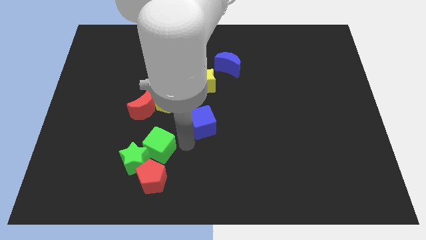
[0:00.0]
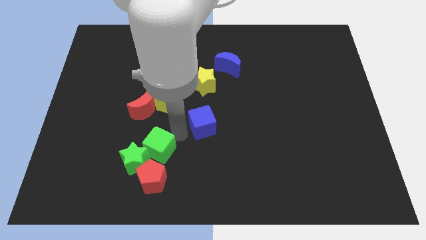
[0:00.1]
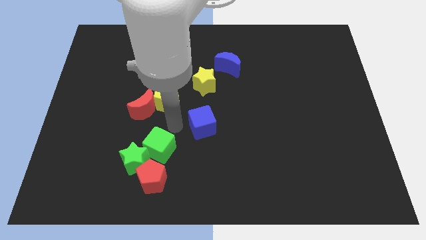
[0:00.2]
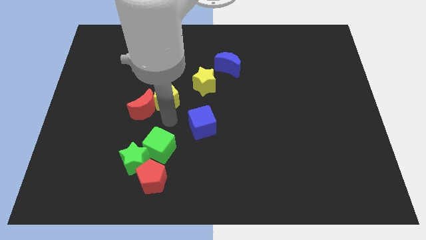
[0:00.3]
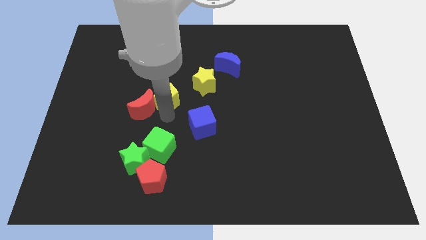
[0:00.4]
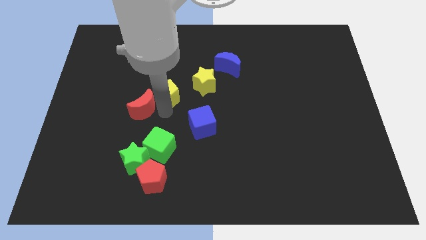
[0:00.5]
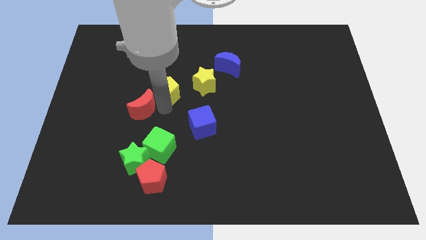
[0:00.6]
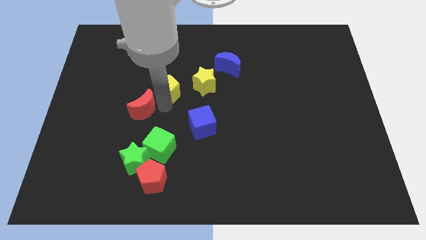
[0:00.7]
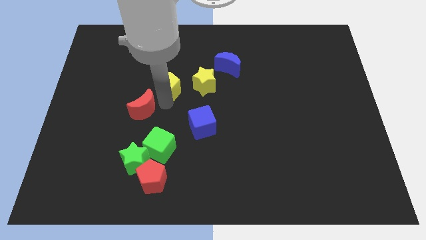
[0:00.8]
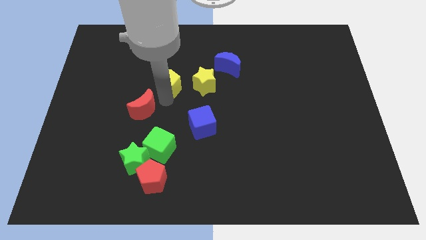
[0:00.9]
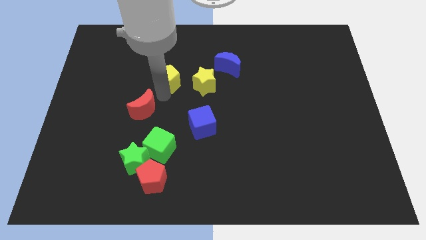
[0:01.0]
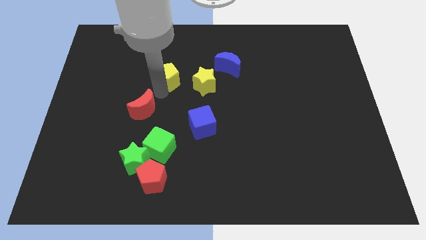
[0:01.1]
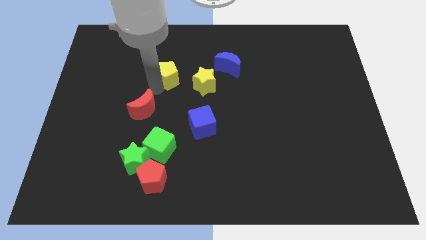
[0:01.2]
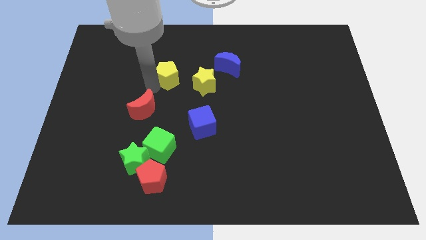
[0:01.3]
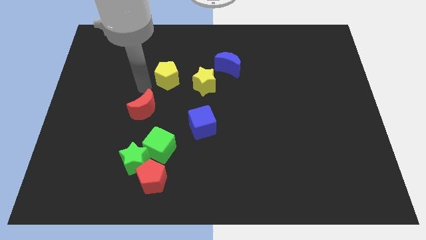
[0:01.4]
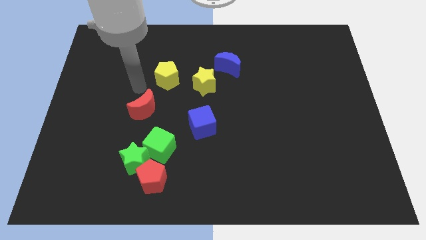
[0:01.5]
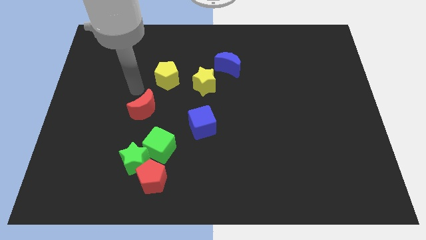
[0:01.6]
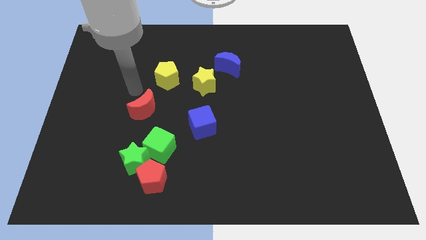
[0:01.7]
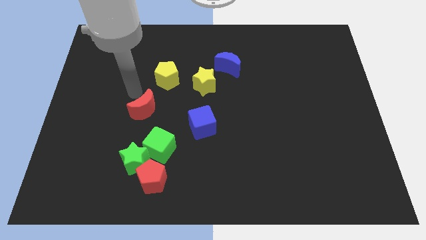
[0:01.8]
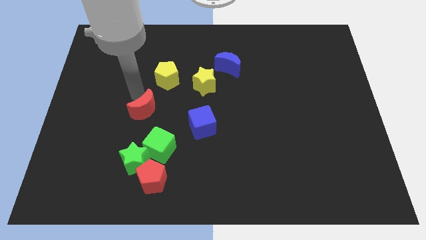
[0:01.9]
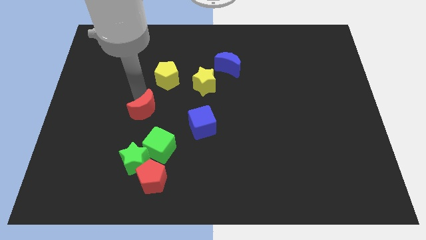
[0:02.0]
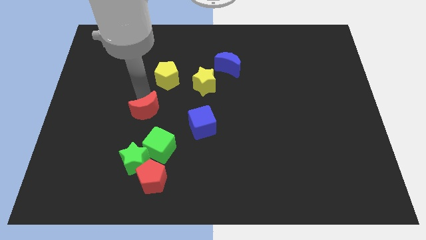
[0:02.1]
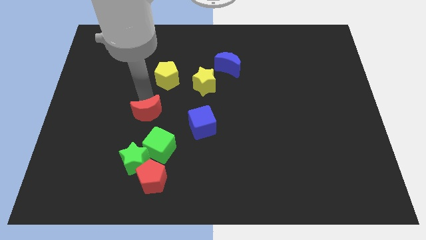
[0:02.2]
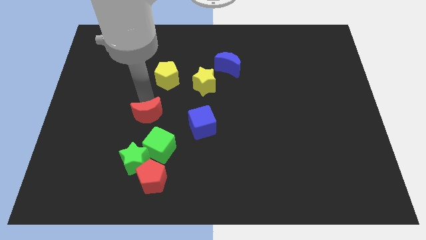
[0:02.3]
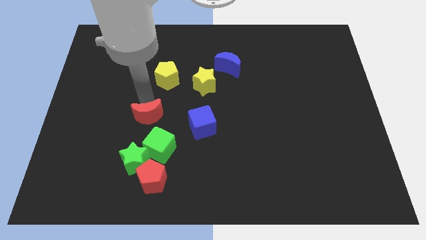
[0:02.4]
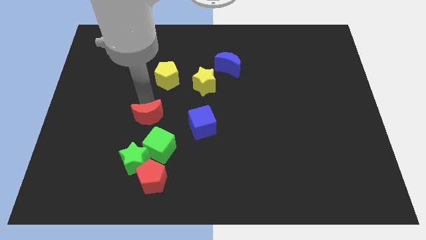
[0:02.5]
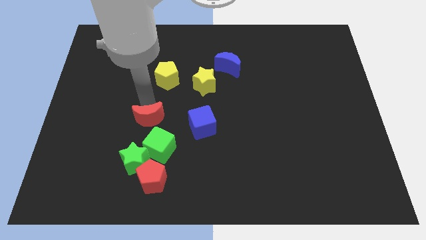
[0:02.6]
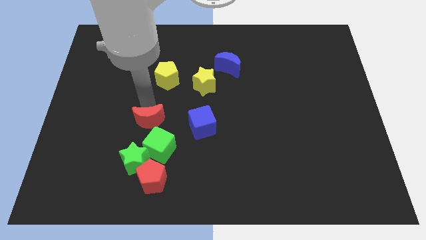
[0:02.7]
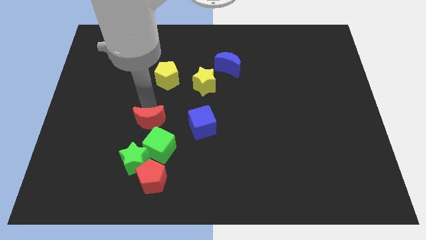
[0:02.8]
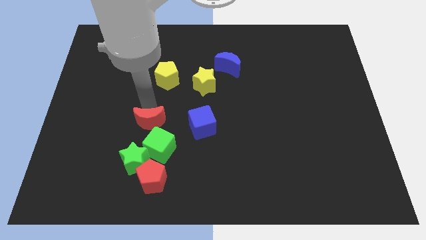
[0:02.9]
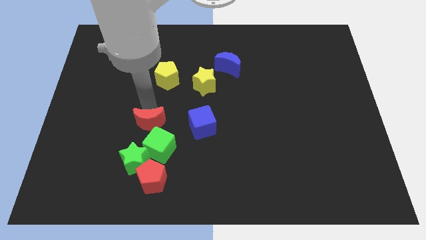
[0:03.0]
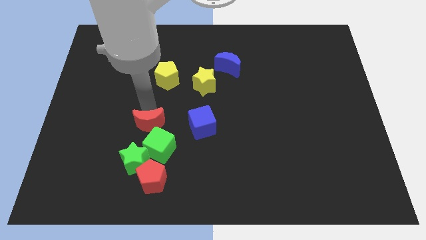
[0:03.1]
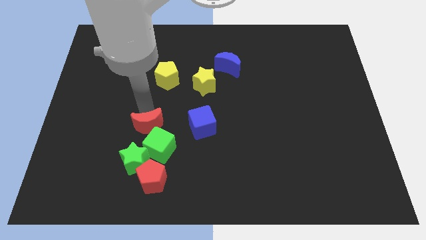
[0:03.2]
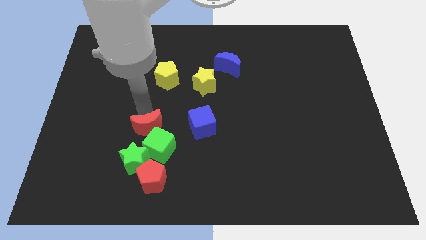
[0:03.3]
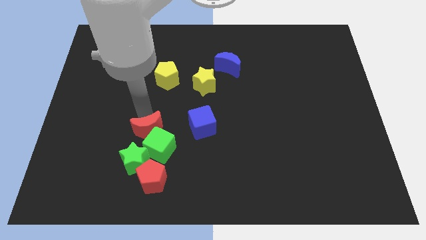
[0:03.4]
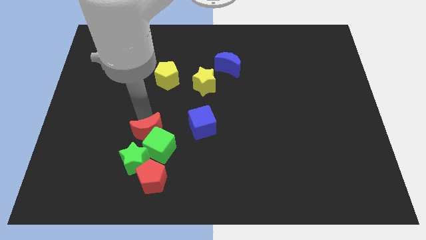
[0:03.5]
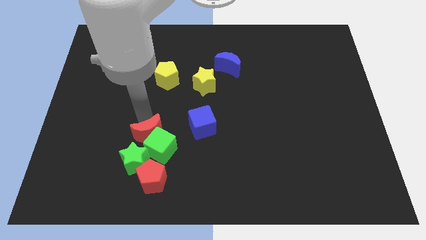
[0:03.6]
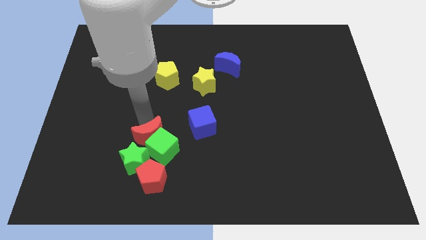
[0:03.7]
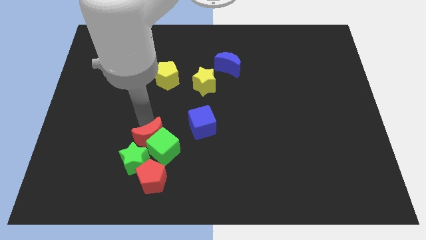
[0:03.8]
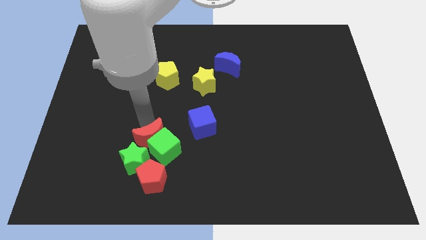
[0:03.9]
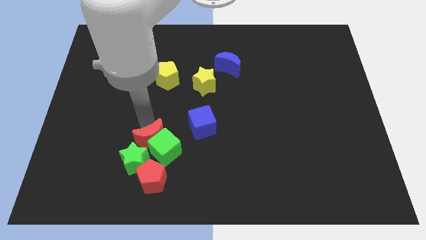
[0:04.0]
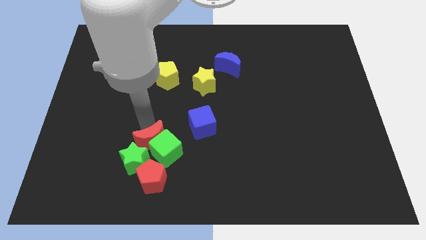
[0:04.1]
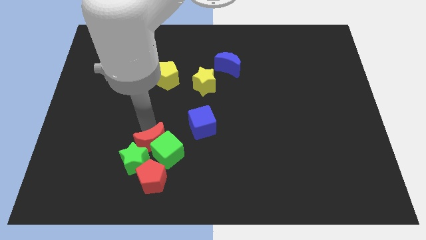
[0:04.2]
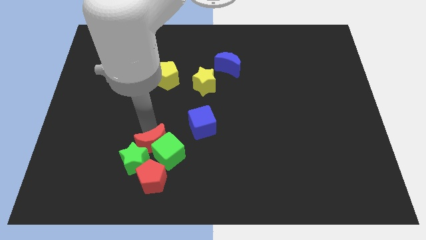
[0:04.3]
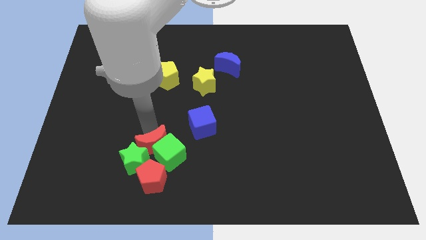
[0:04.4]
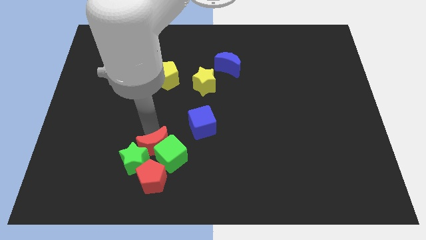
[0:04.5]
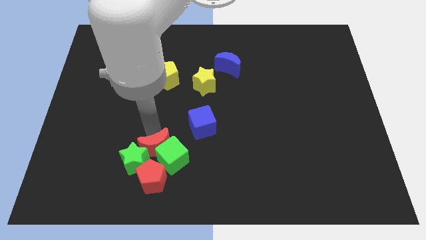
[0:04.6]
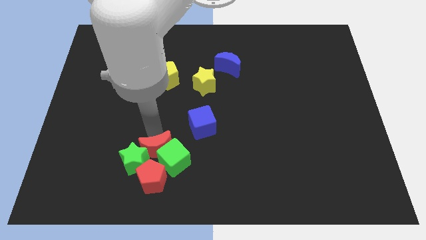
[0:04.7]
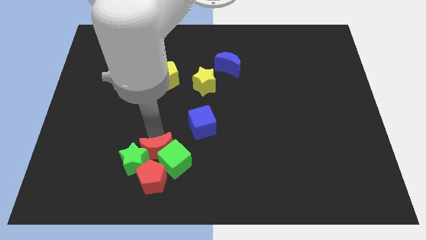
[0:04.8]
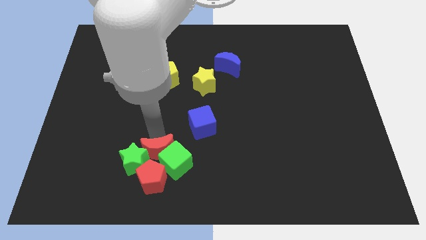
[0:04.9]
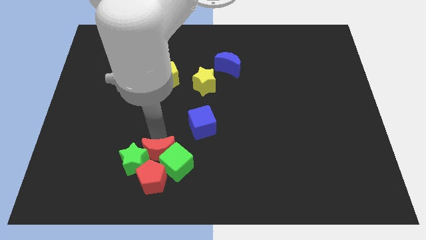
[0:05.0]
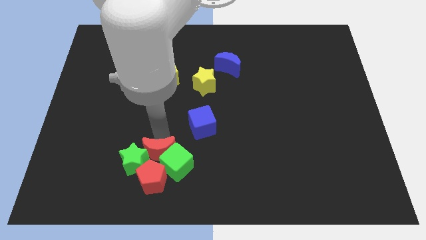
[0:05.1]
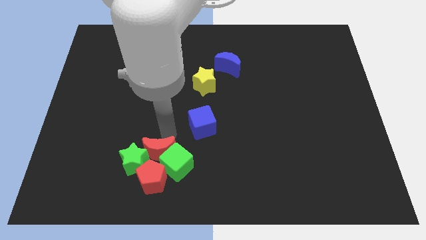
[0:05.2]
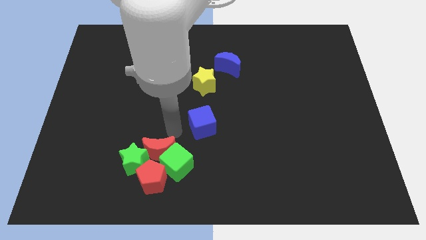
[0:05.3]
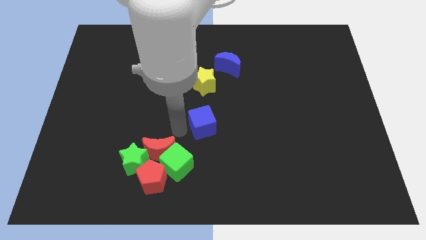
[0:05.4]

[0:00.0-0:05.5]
place the red crescent to the right side of green star along with yellow pentagon

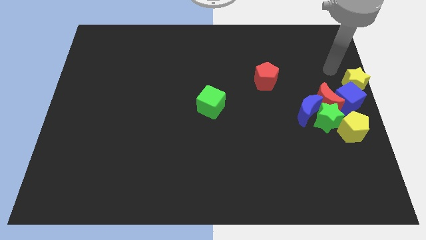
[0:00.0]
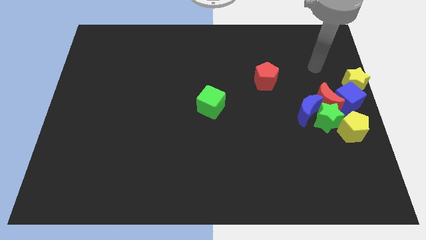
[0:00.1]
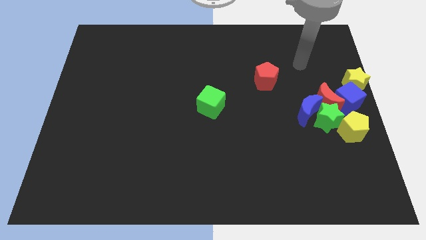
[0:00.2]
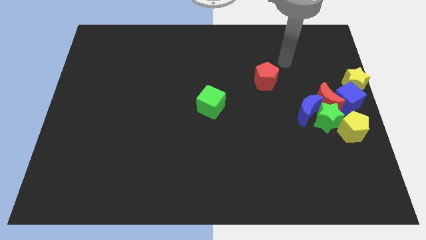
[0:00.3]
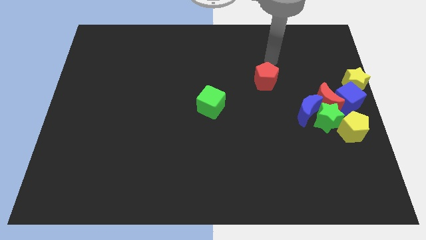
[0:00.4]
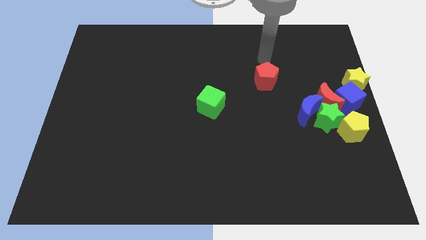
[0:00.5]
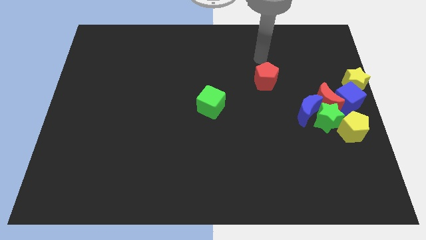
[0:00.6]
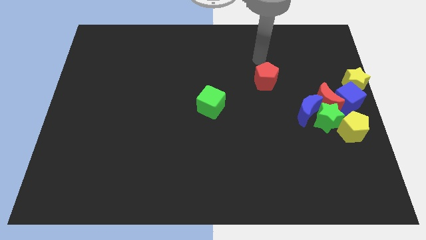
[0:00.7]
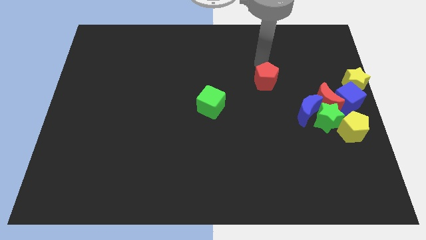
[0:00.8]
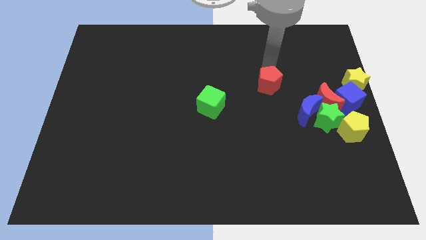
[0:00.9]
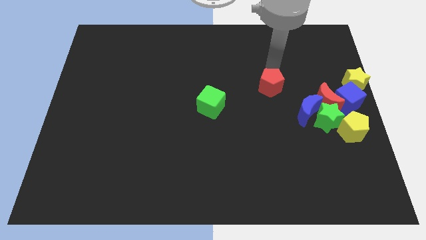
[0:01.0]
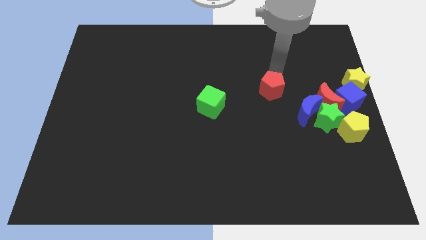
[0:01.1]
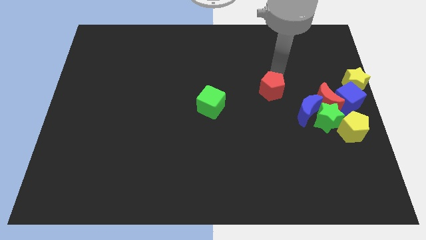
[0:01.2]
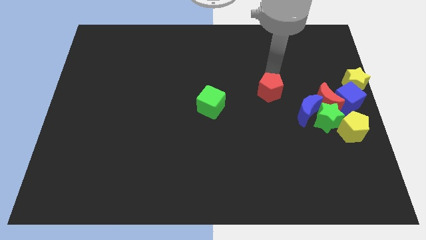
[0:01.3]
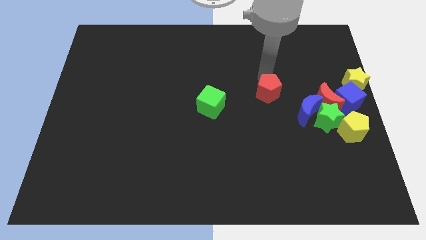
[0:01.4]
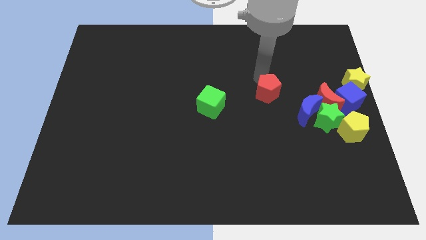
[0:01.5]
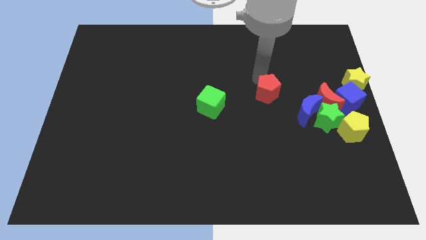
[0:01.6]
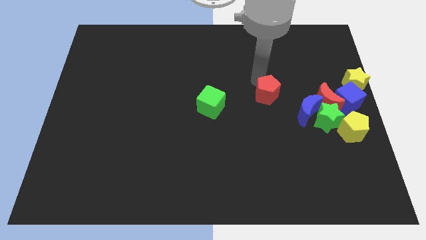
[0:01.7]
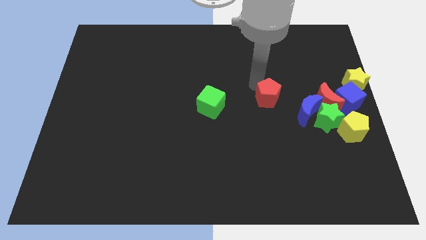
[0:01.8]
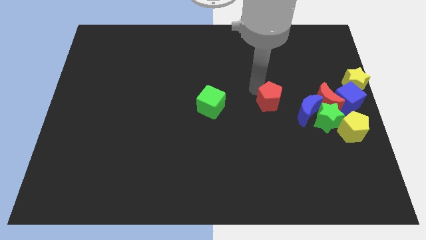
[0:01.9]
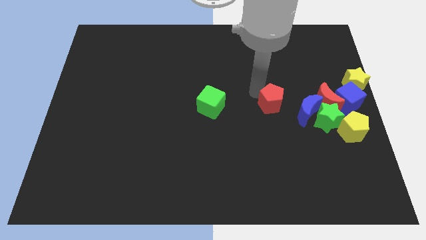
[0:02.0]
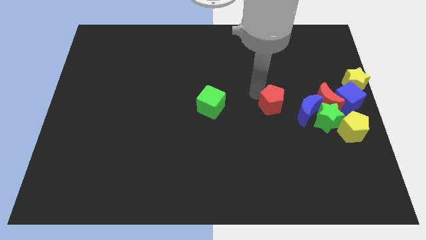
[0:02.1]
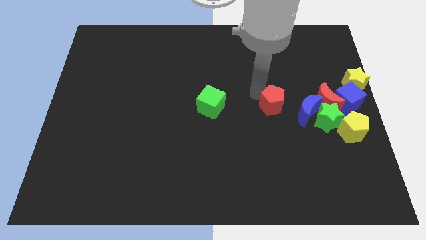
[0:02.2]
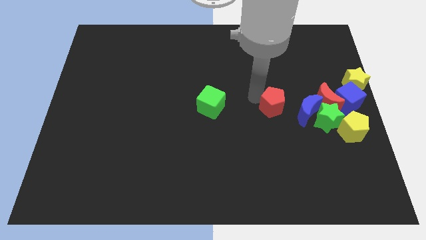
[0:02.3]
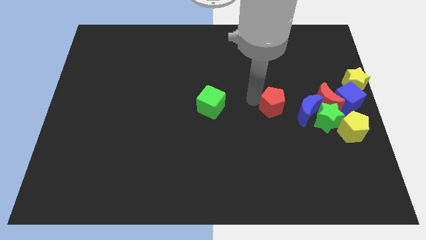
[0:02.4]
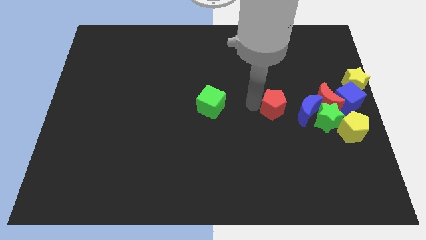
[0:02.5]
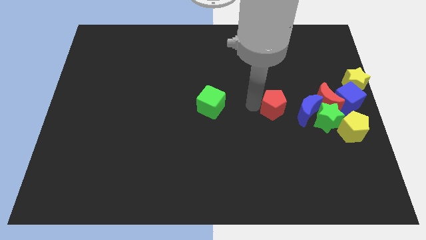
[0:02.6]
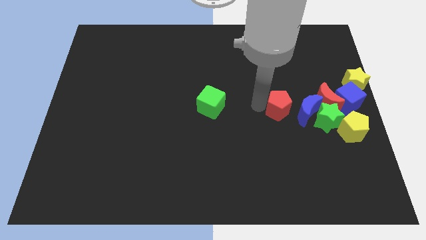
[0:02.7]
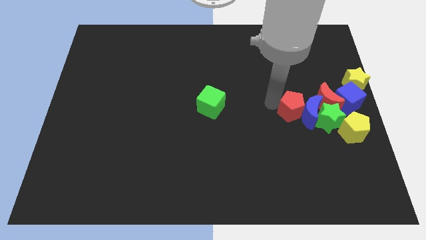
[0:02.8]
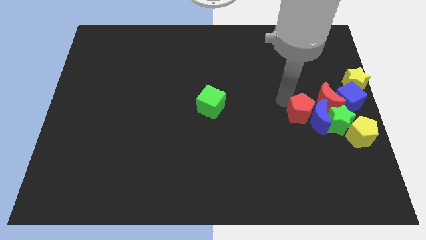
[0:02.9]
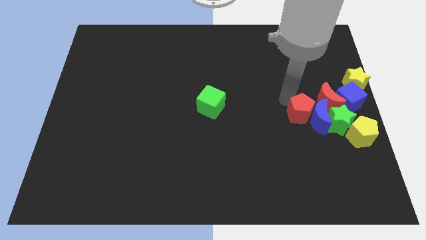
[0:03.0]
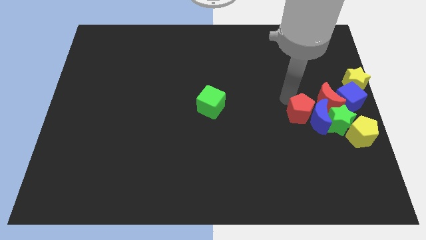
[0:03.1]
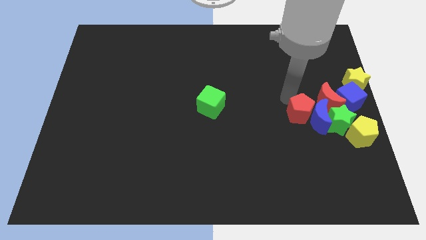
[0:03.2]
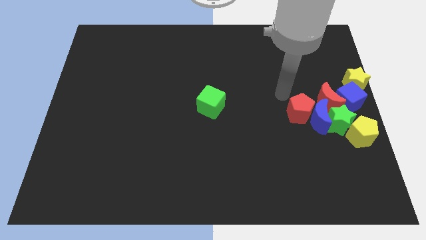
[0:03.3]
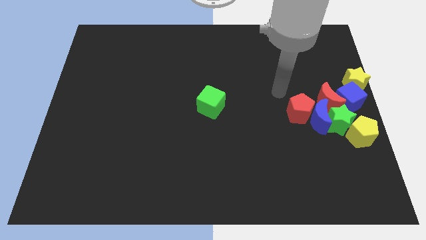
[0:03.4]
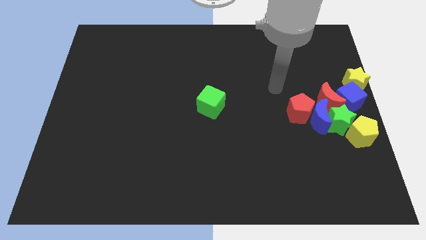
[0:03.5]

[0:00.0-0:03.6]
move the red pentagon left to the blue moon
